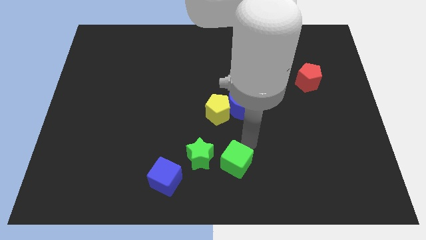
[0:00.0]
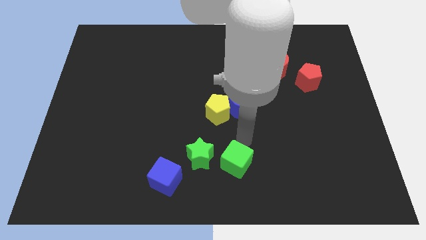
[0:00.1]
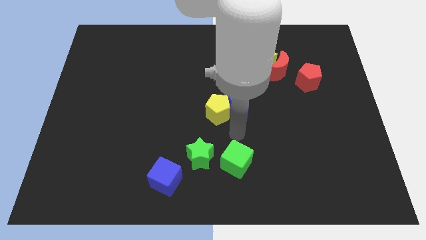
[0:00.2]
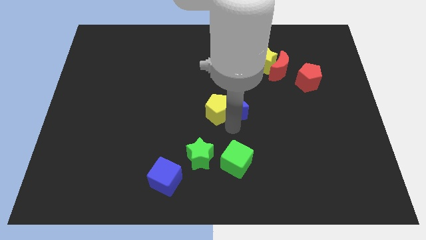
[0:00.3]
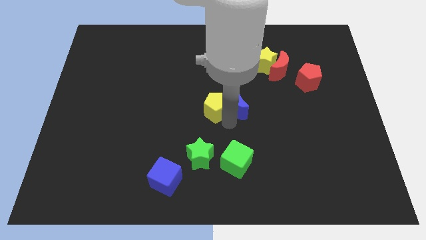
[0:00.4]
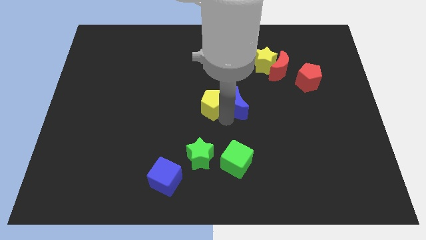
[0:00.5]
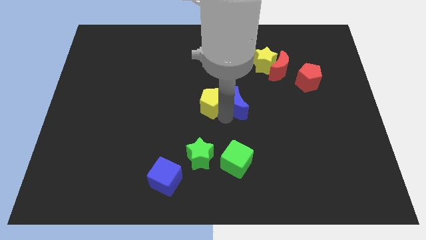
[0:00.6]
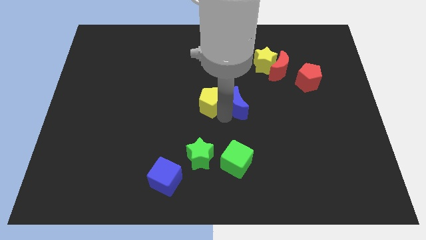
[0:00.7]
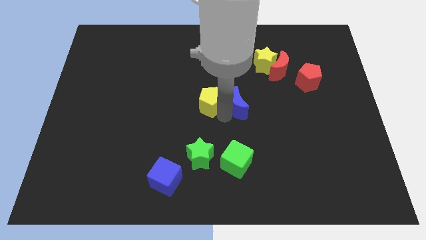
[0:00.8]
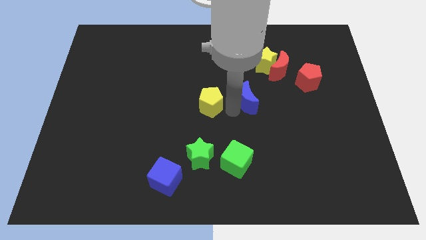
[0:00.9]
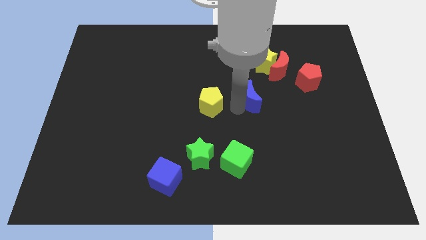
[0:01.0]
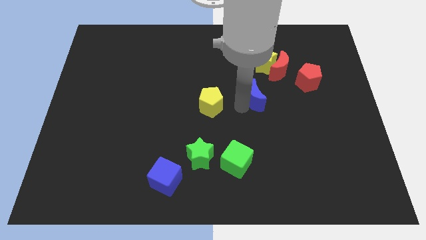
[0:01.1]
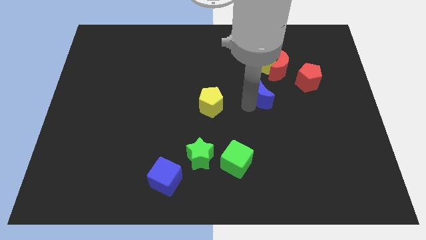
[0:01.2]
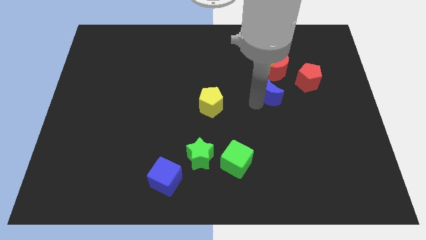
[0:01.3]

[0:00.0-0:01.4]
move blue moon away from the yellow pentagon

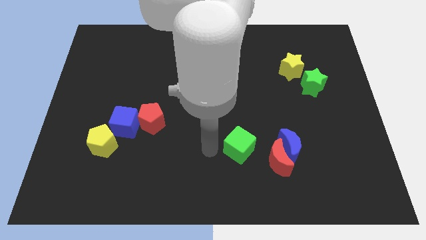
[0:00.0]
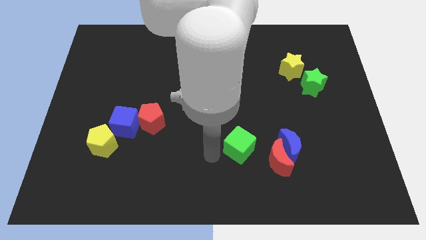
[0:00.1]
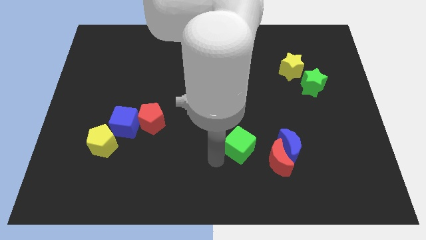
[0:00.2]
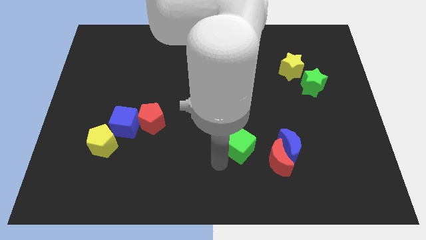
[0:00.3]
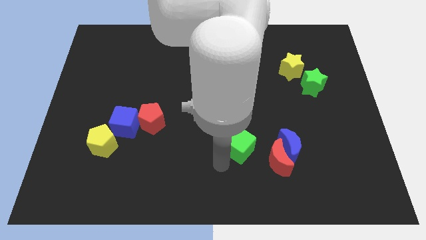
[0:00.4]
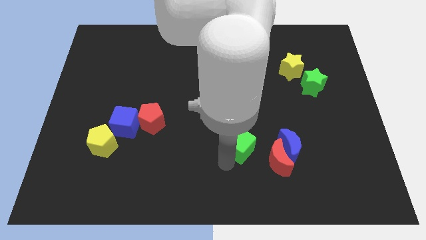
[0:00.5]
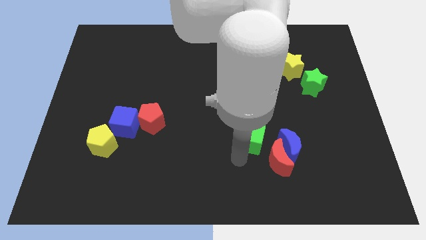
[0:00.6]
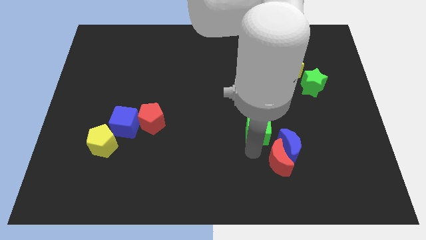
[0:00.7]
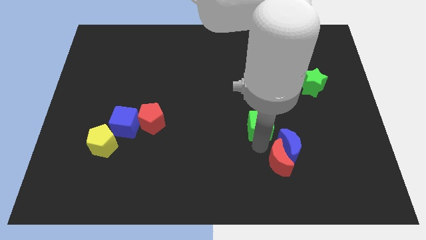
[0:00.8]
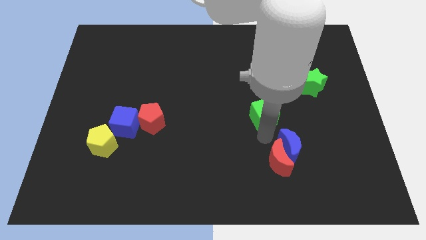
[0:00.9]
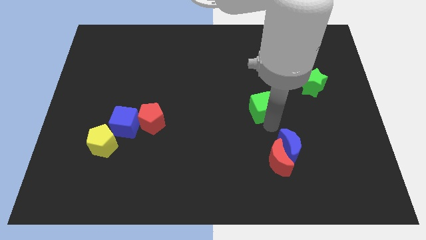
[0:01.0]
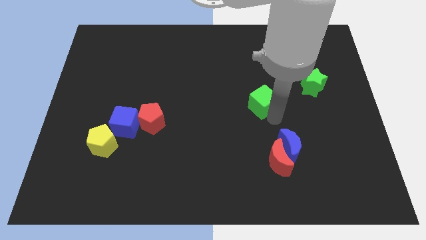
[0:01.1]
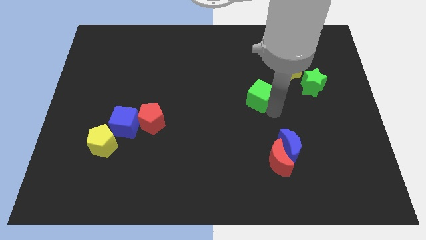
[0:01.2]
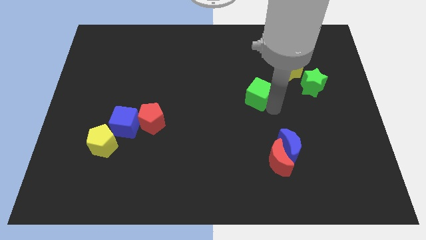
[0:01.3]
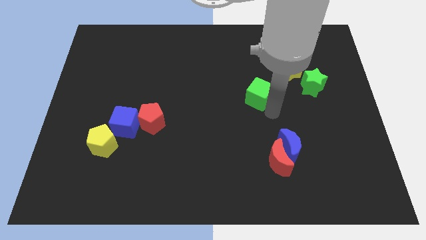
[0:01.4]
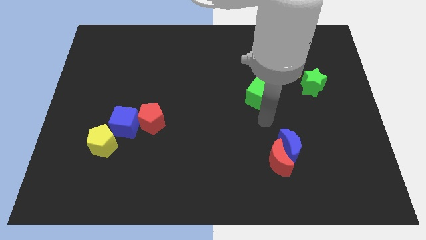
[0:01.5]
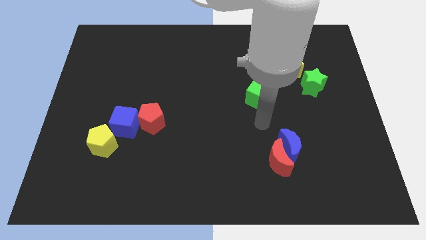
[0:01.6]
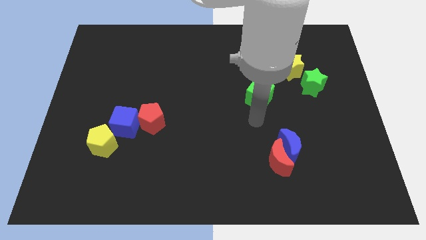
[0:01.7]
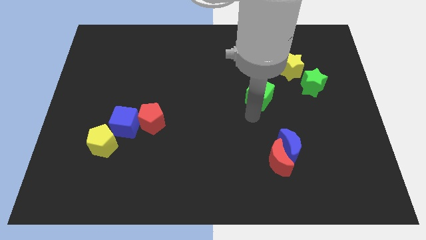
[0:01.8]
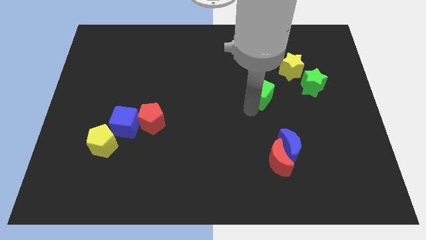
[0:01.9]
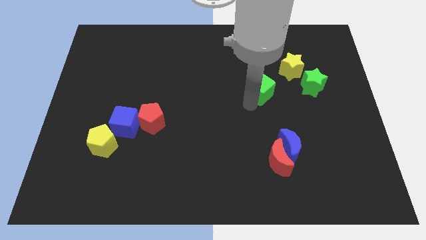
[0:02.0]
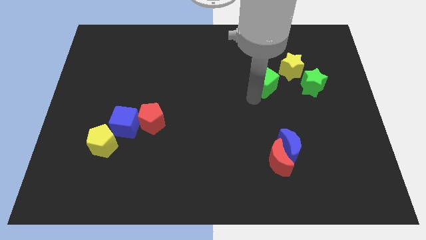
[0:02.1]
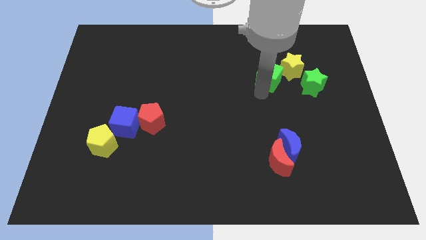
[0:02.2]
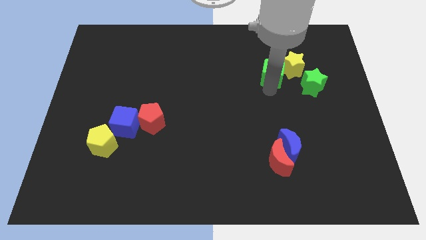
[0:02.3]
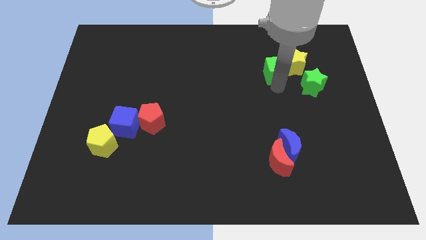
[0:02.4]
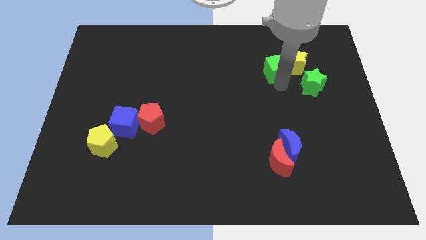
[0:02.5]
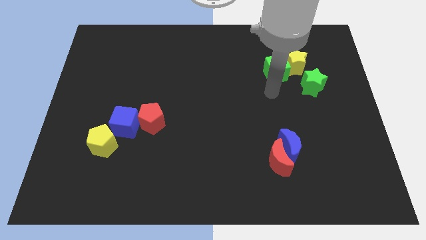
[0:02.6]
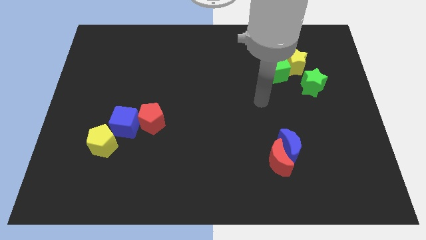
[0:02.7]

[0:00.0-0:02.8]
move the green cube diagonal into the yellow star

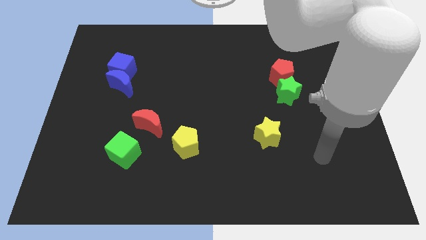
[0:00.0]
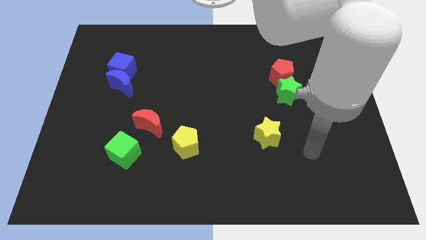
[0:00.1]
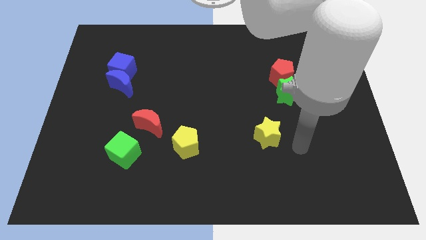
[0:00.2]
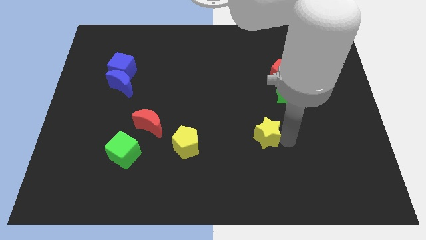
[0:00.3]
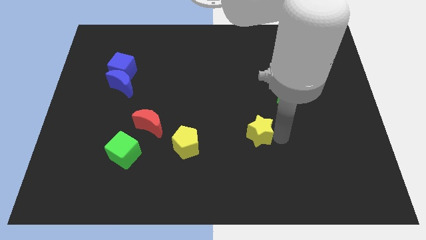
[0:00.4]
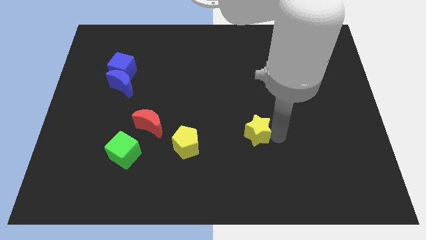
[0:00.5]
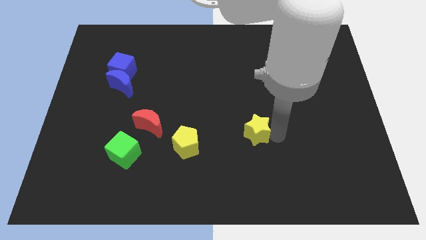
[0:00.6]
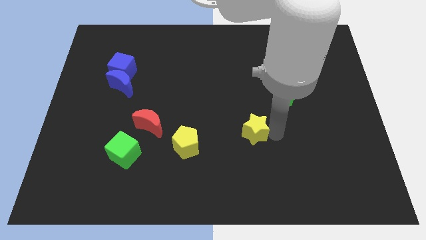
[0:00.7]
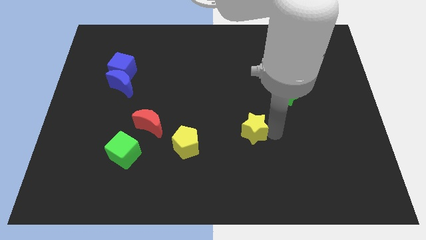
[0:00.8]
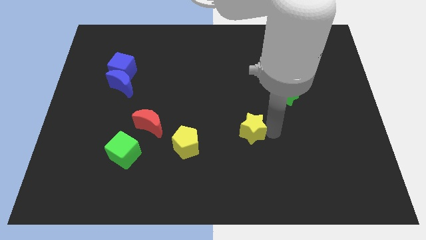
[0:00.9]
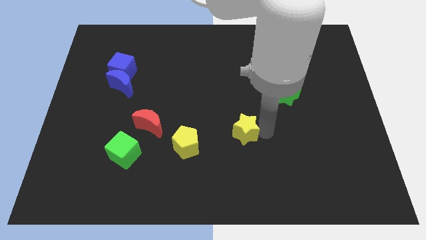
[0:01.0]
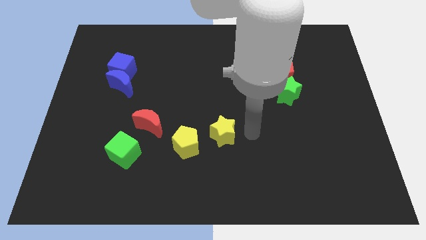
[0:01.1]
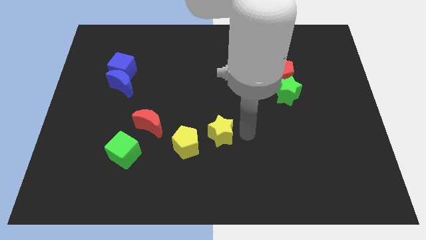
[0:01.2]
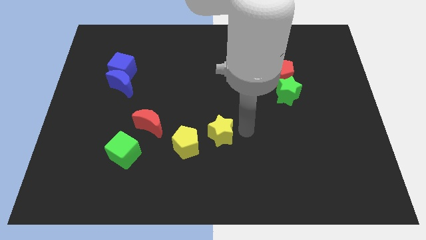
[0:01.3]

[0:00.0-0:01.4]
push the yellow star towards the yellow pentagon

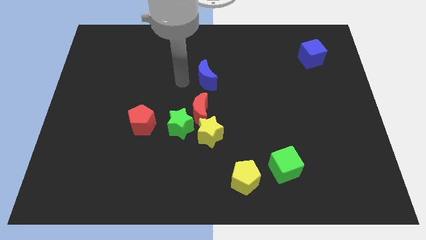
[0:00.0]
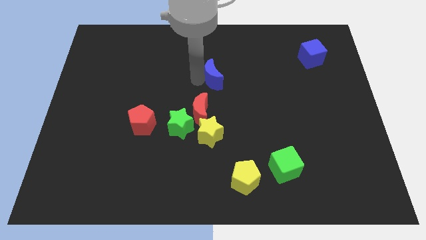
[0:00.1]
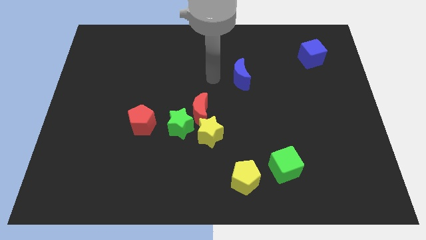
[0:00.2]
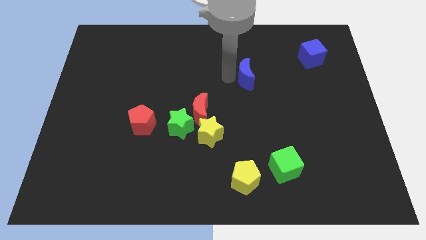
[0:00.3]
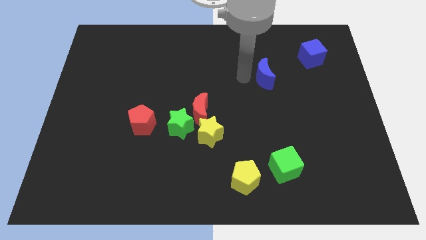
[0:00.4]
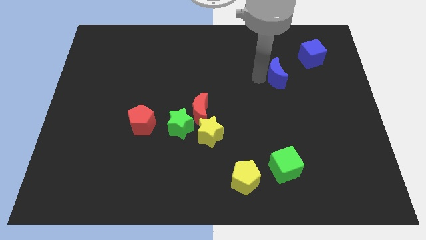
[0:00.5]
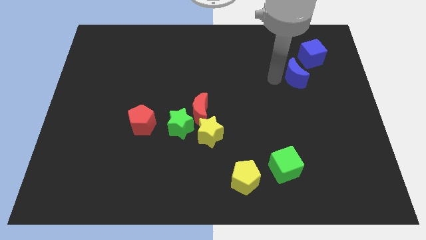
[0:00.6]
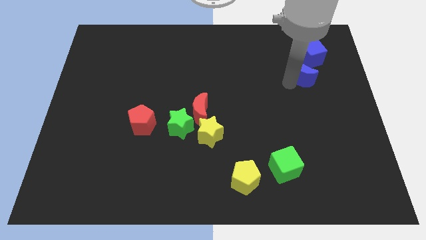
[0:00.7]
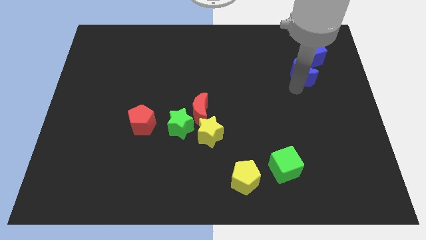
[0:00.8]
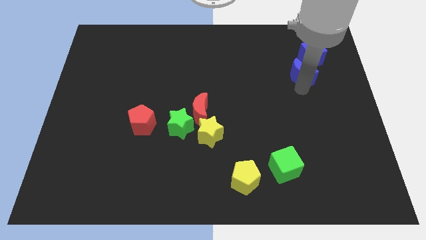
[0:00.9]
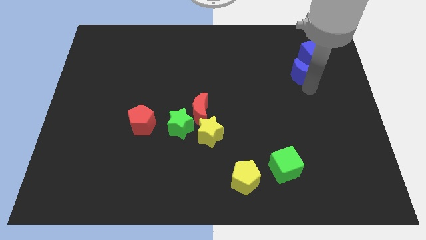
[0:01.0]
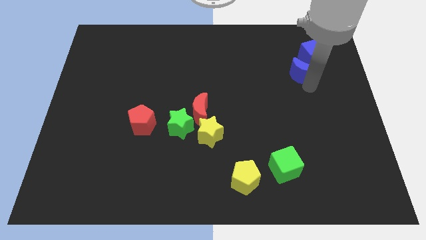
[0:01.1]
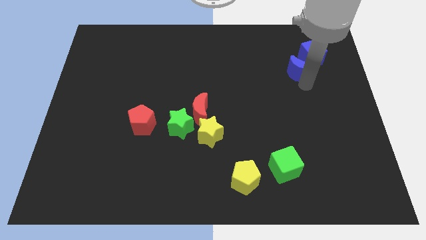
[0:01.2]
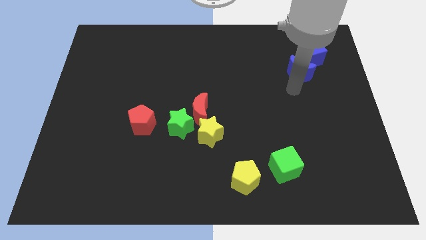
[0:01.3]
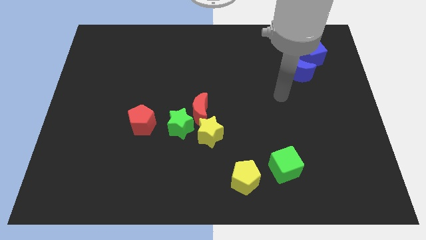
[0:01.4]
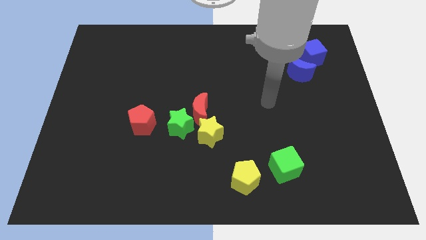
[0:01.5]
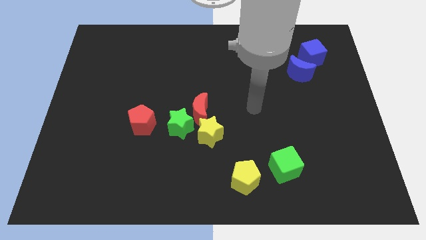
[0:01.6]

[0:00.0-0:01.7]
slide the blue moon into the blue cube

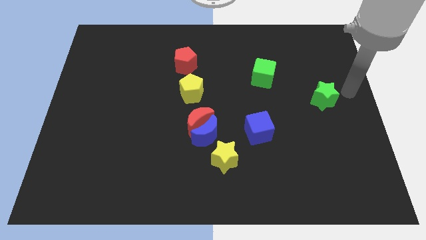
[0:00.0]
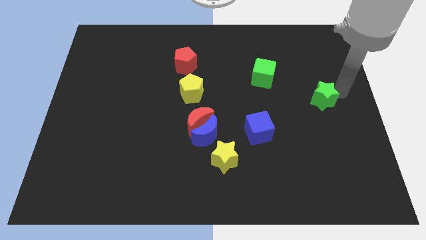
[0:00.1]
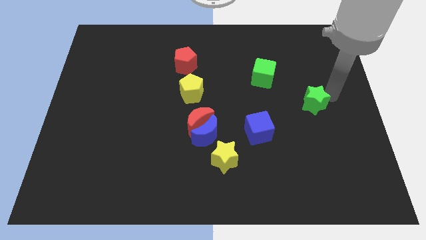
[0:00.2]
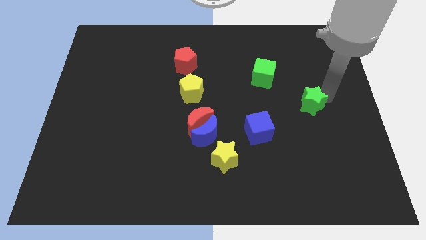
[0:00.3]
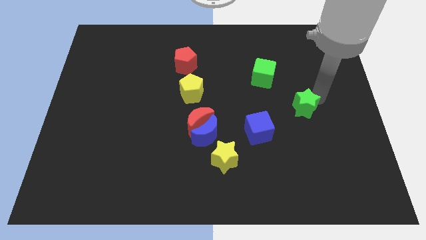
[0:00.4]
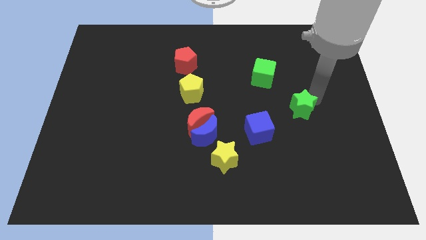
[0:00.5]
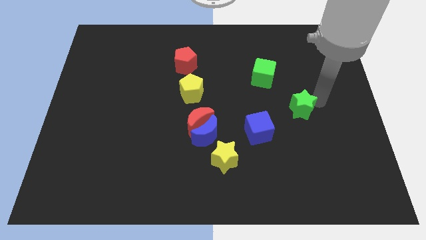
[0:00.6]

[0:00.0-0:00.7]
push the green star closer to the blue cube

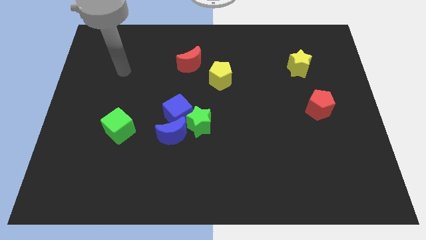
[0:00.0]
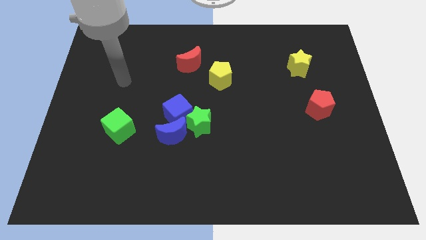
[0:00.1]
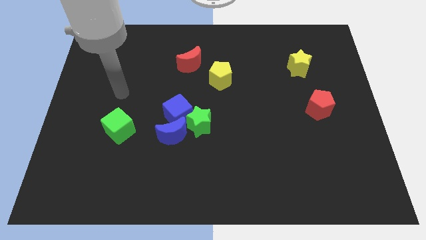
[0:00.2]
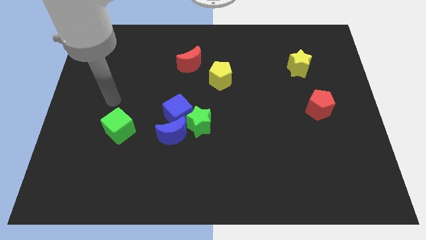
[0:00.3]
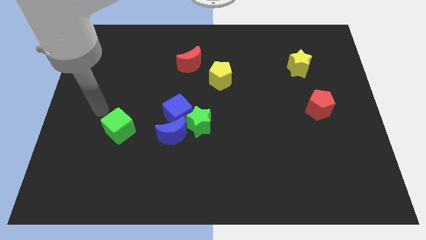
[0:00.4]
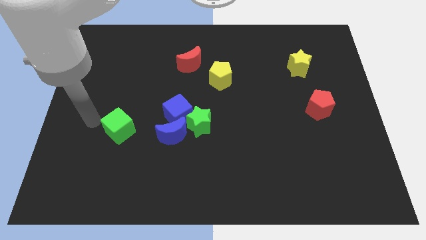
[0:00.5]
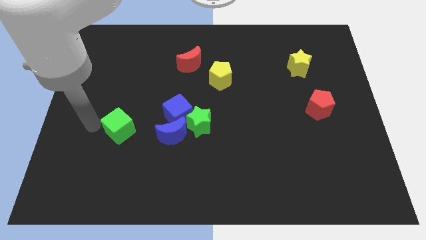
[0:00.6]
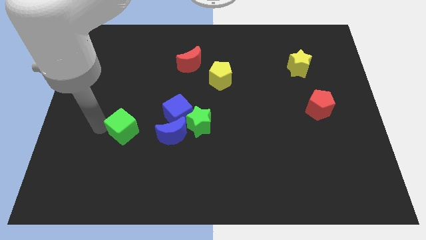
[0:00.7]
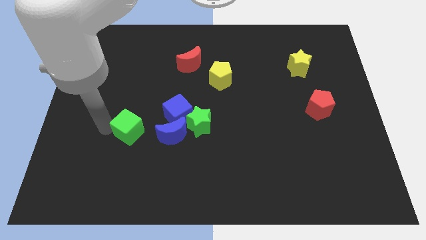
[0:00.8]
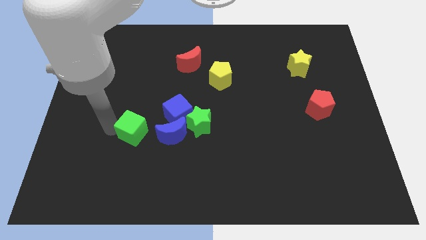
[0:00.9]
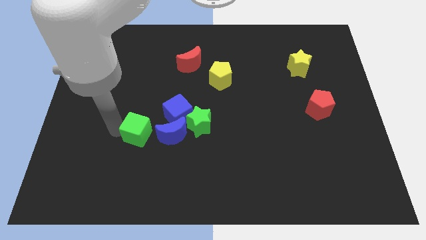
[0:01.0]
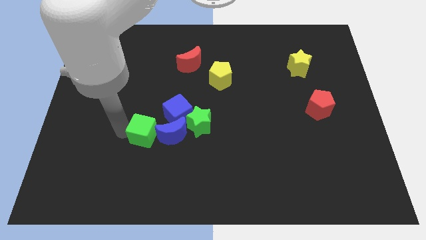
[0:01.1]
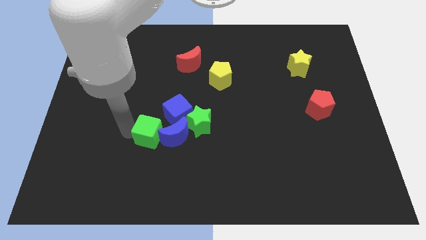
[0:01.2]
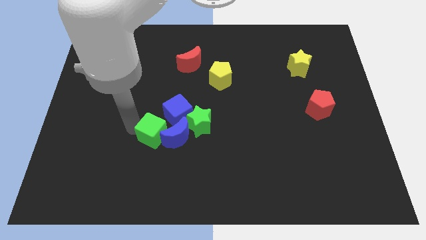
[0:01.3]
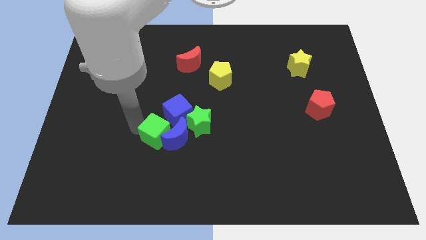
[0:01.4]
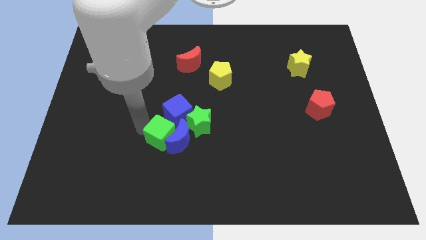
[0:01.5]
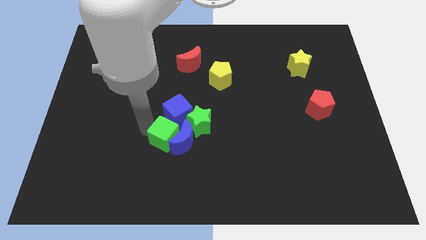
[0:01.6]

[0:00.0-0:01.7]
push the green cube into the blue crescent
